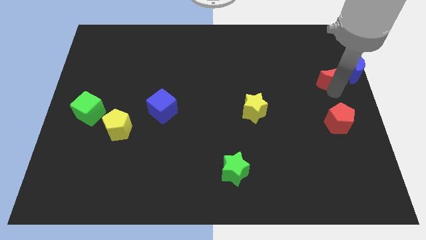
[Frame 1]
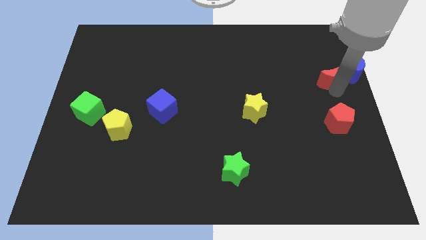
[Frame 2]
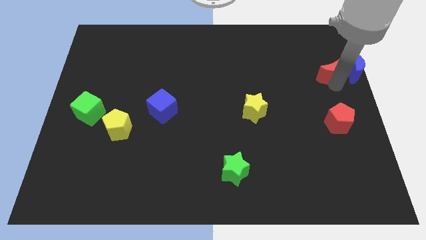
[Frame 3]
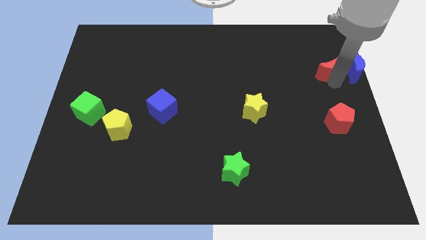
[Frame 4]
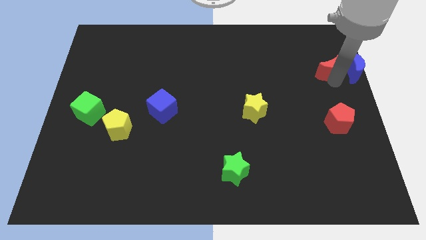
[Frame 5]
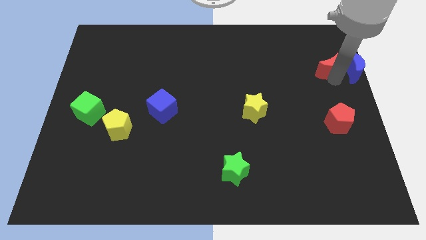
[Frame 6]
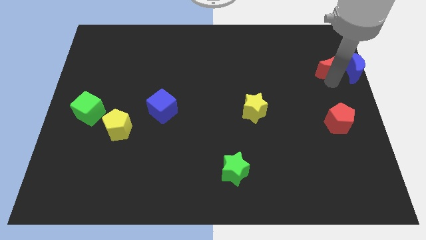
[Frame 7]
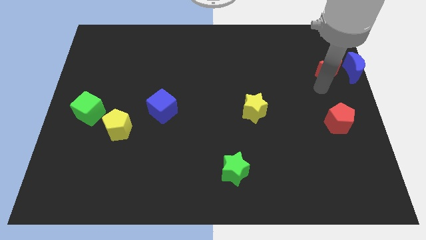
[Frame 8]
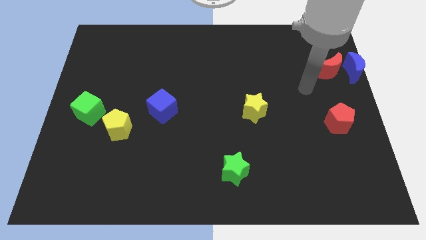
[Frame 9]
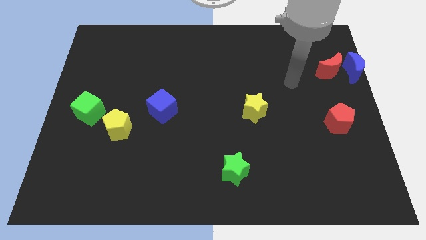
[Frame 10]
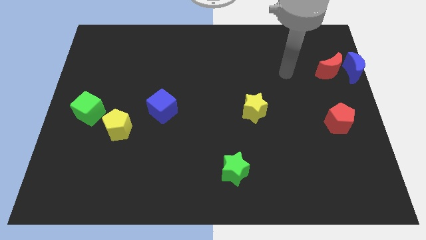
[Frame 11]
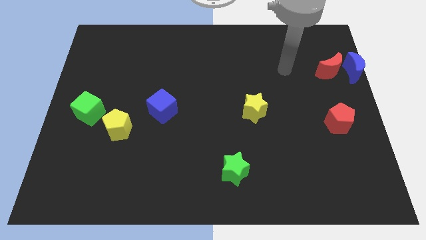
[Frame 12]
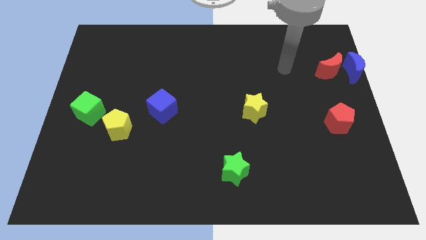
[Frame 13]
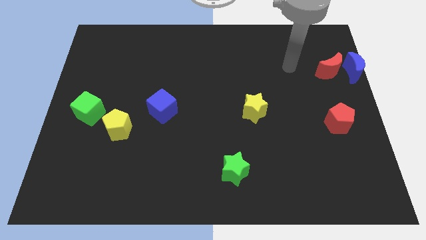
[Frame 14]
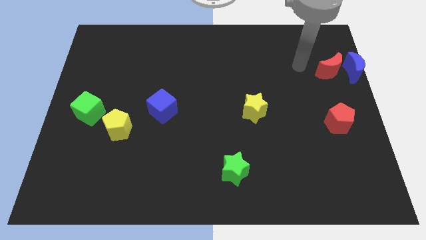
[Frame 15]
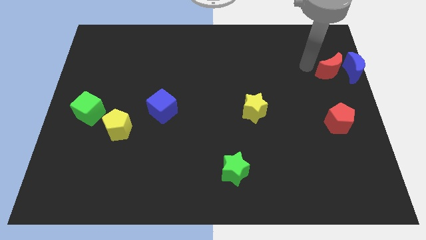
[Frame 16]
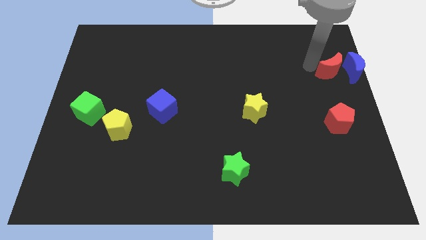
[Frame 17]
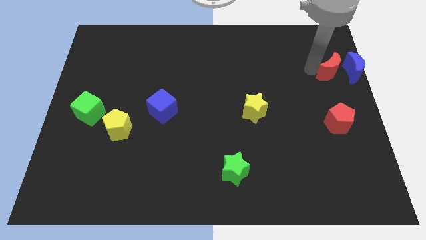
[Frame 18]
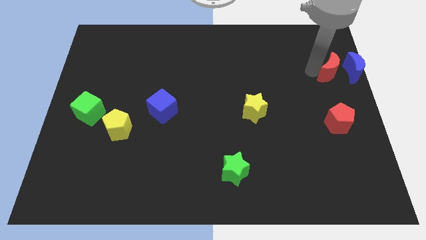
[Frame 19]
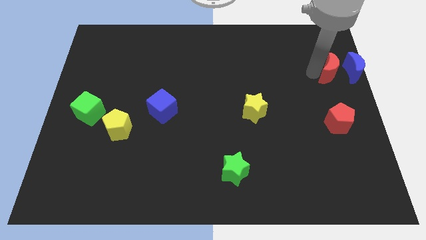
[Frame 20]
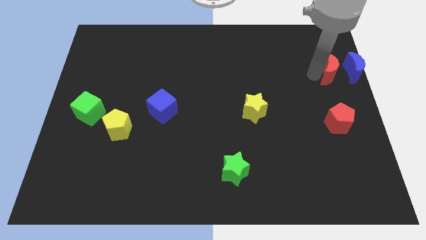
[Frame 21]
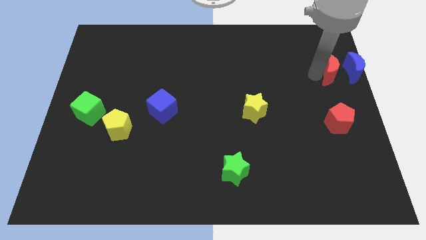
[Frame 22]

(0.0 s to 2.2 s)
place your arm at the left side of red crescent

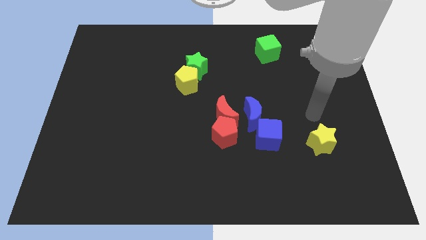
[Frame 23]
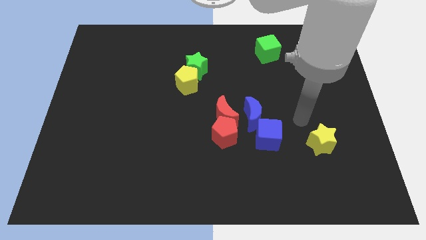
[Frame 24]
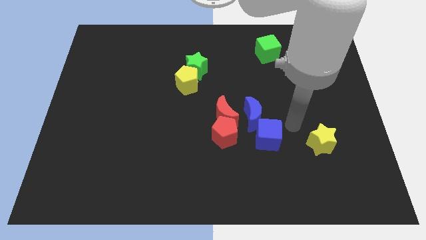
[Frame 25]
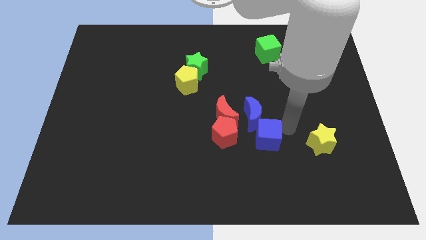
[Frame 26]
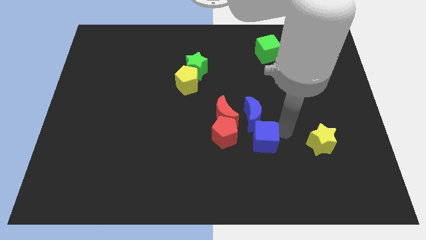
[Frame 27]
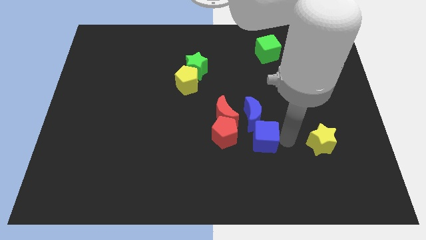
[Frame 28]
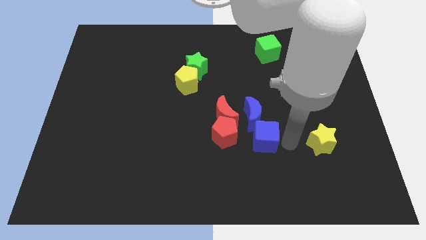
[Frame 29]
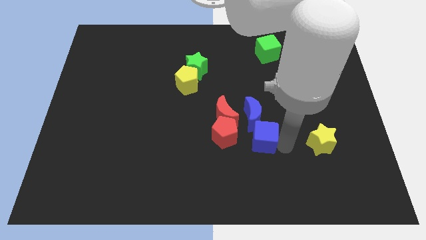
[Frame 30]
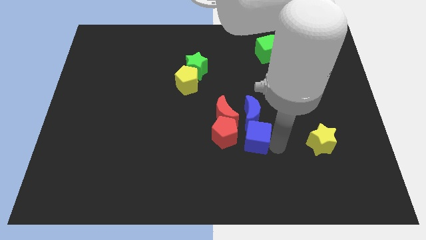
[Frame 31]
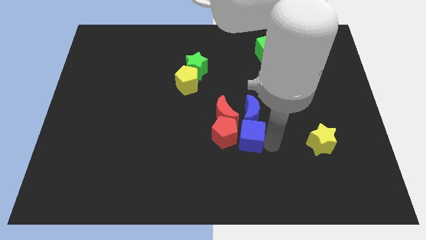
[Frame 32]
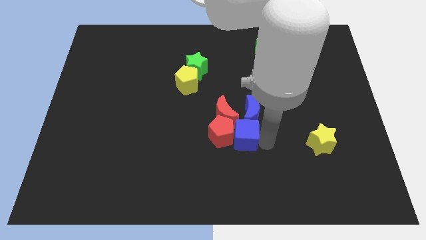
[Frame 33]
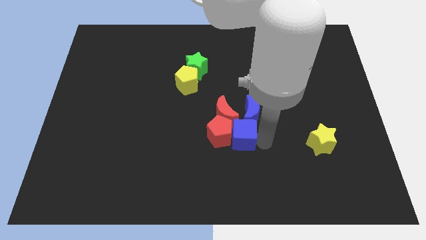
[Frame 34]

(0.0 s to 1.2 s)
push blue cube into red pentagon

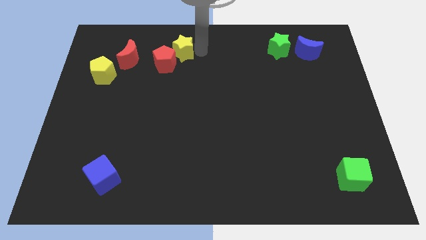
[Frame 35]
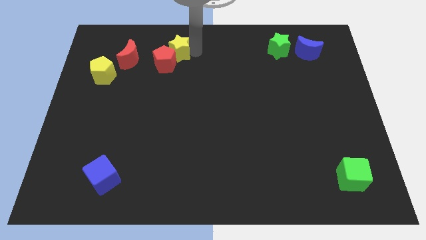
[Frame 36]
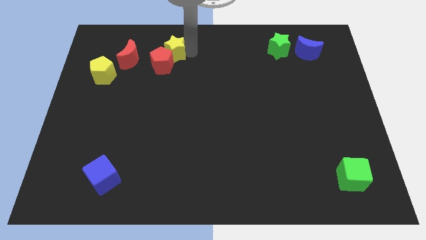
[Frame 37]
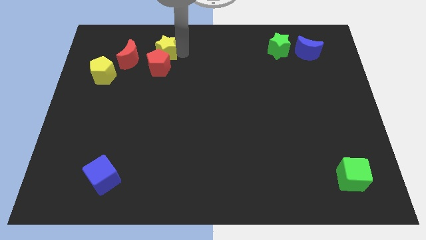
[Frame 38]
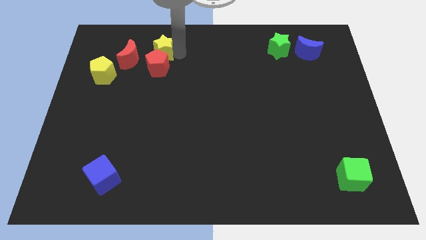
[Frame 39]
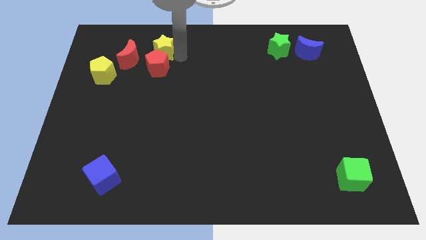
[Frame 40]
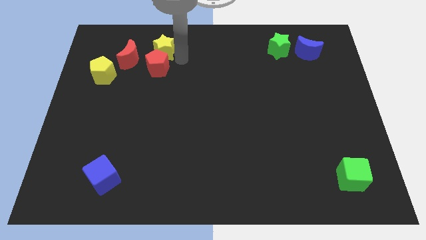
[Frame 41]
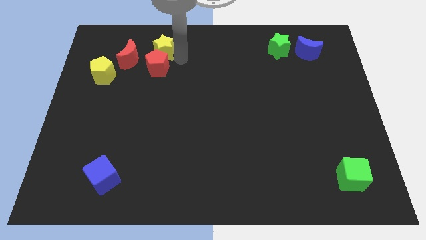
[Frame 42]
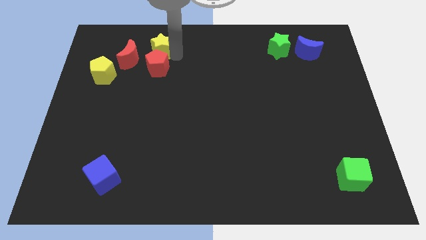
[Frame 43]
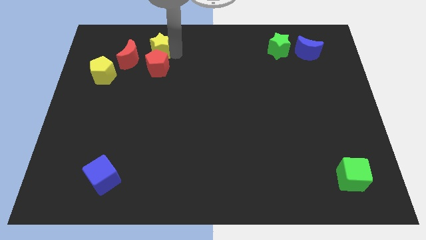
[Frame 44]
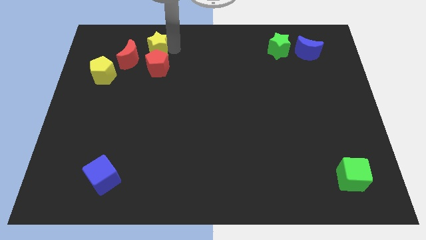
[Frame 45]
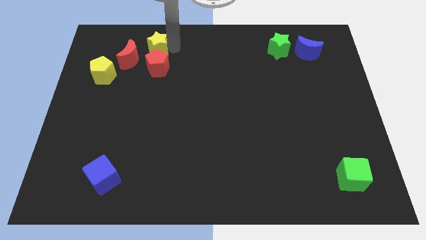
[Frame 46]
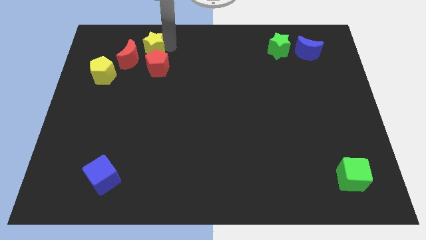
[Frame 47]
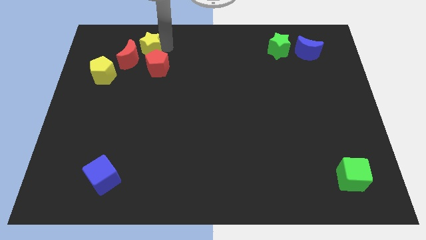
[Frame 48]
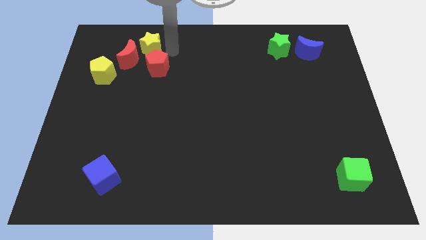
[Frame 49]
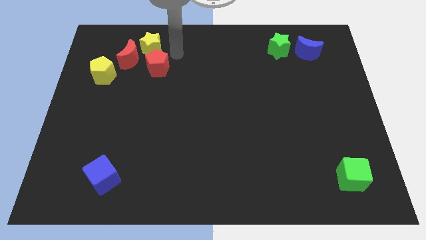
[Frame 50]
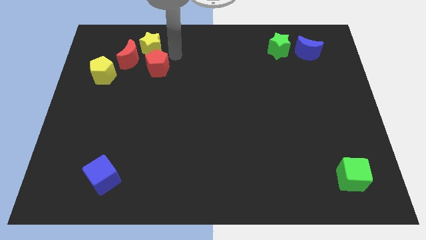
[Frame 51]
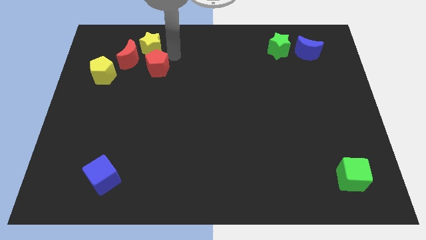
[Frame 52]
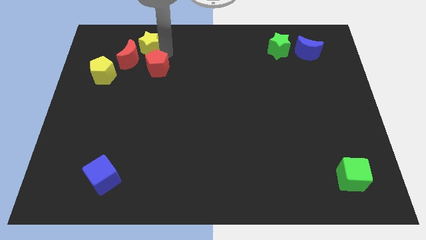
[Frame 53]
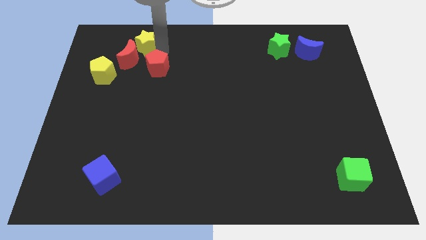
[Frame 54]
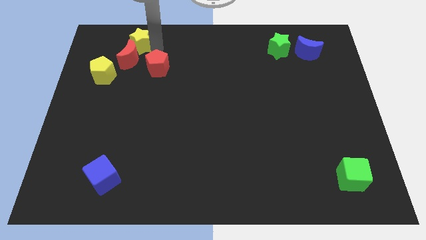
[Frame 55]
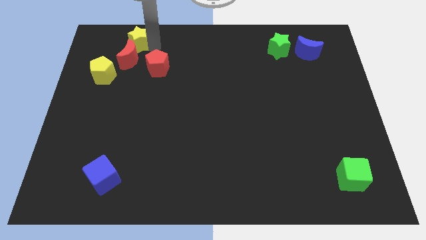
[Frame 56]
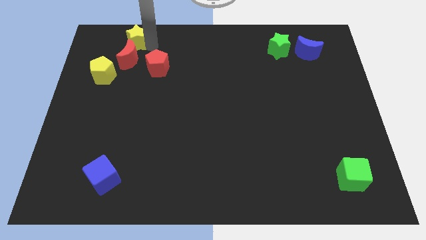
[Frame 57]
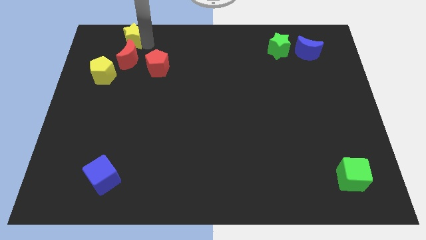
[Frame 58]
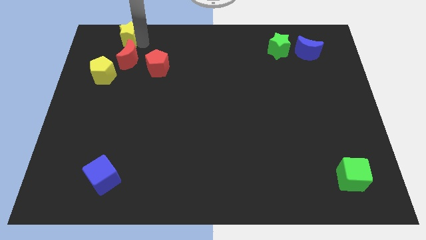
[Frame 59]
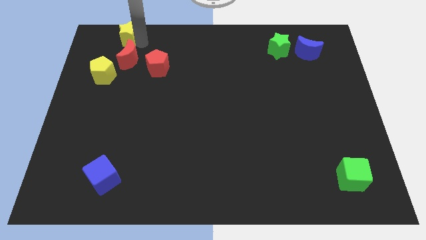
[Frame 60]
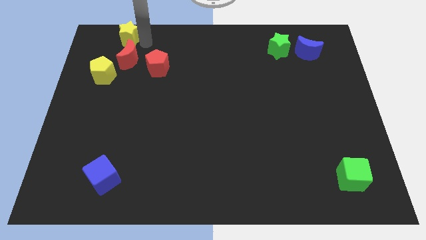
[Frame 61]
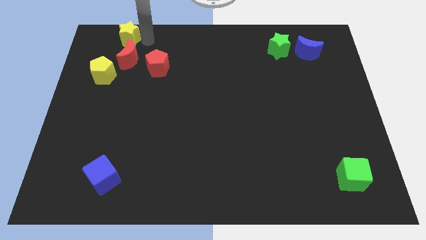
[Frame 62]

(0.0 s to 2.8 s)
push the yellow star to the top of the red crescent

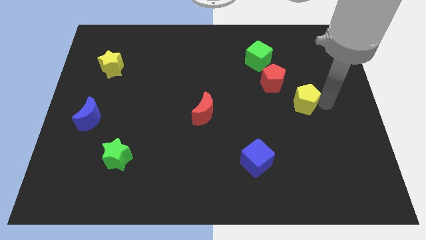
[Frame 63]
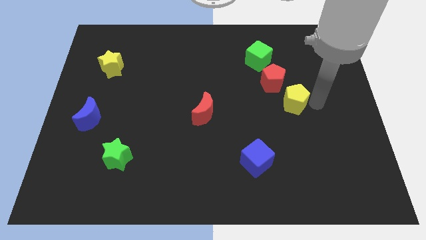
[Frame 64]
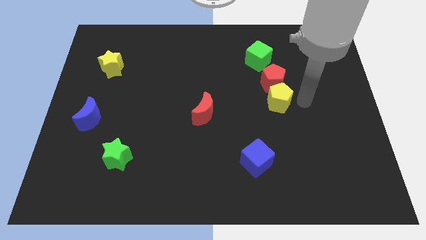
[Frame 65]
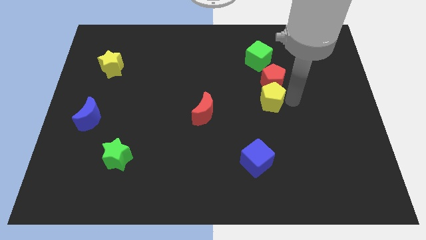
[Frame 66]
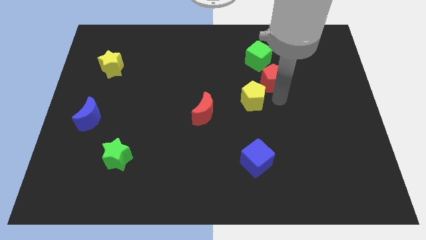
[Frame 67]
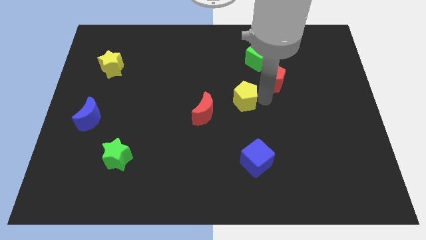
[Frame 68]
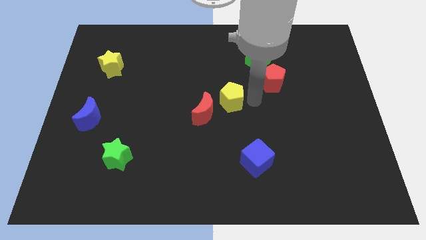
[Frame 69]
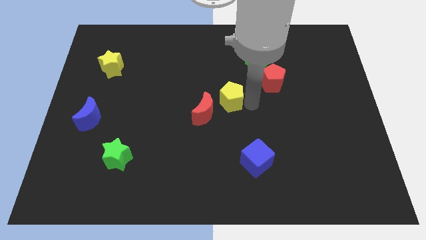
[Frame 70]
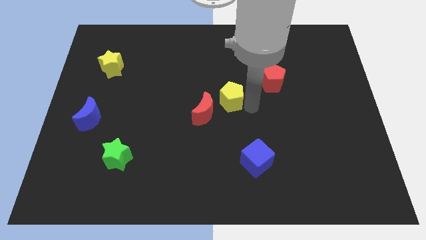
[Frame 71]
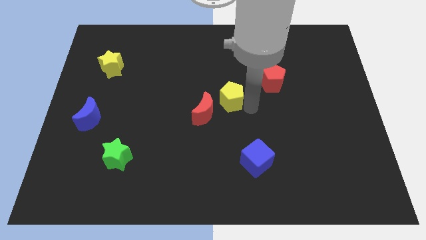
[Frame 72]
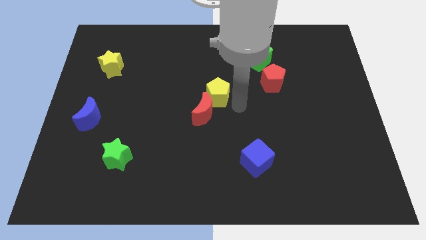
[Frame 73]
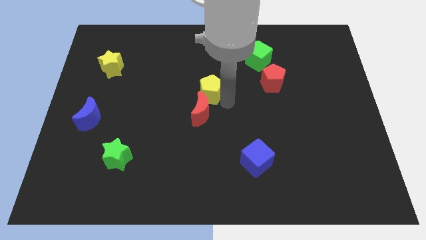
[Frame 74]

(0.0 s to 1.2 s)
push the yellow pentagon to the top of the red moon

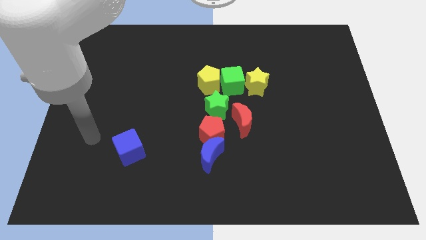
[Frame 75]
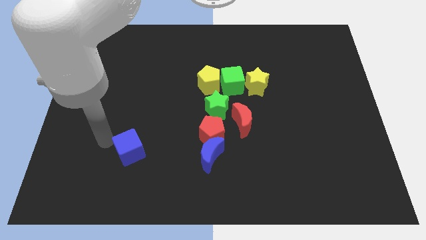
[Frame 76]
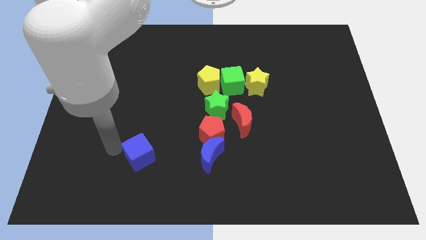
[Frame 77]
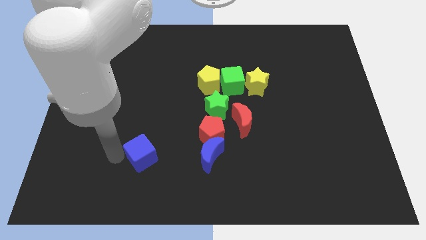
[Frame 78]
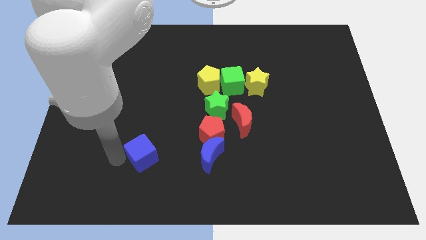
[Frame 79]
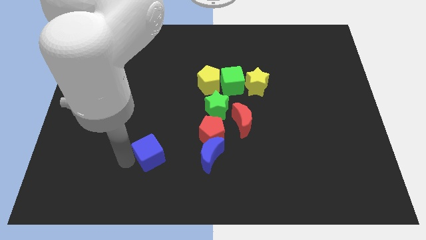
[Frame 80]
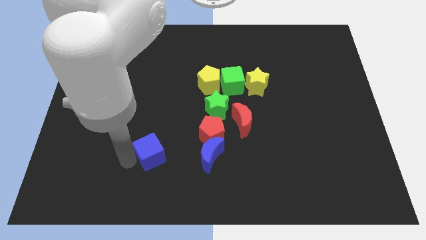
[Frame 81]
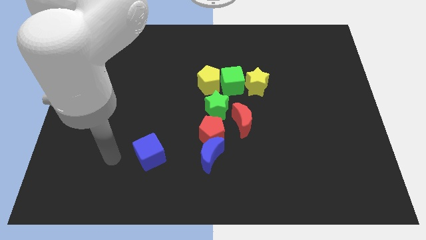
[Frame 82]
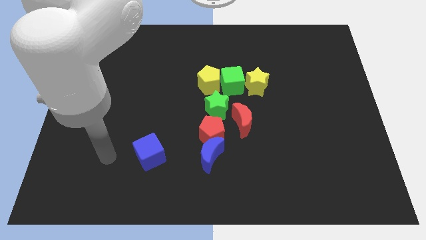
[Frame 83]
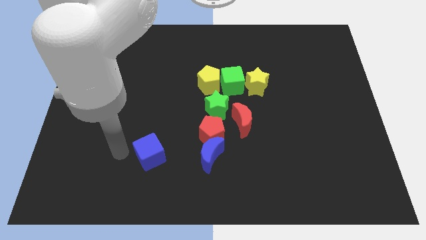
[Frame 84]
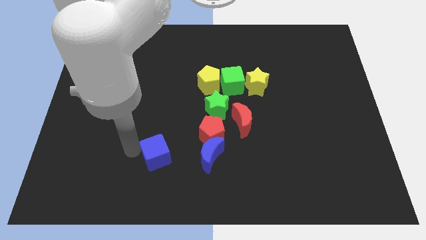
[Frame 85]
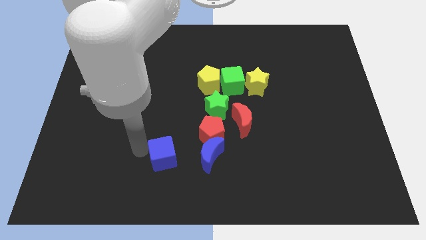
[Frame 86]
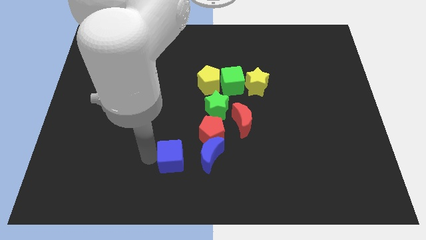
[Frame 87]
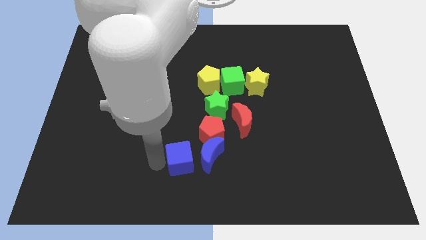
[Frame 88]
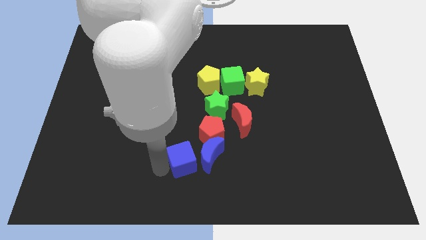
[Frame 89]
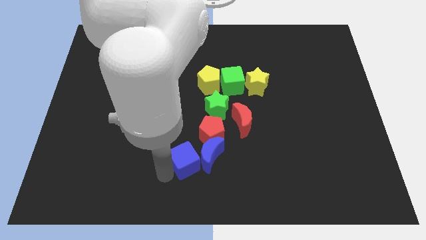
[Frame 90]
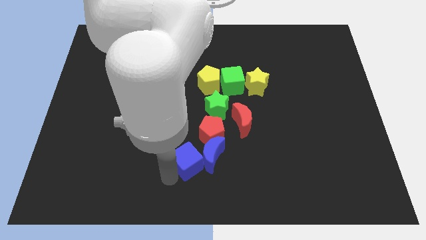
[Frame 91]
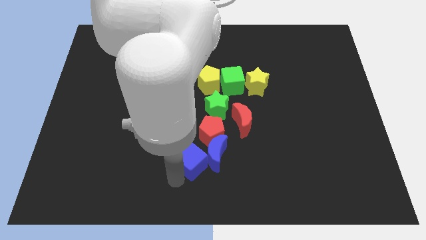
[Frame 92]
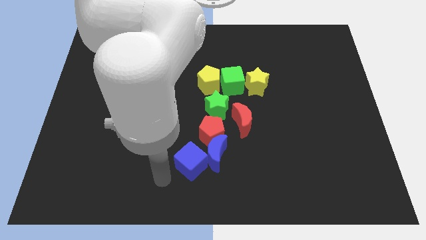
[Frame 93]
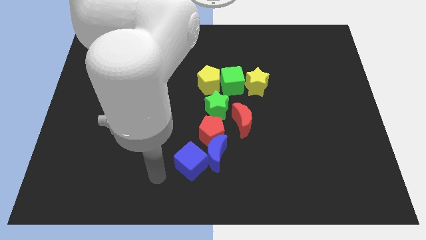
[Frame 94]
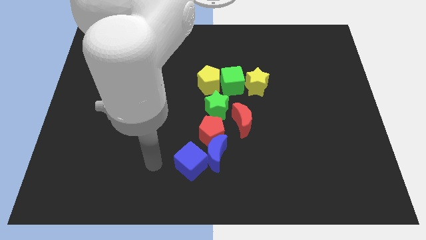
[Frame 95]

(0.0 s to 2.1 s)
put the blue cube into the blue moon
